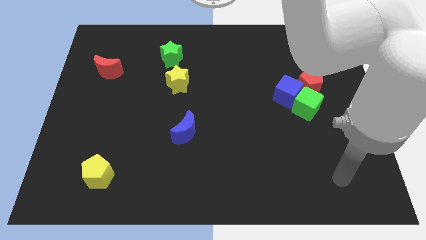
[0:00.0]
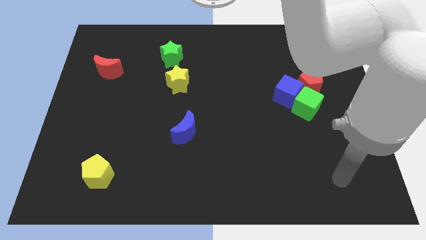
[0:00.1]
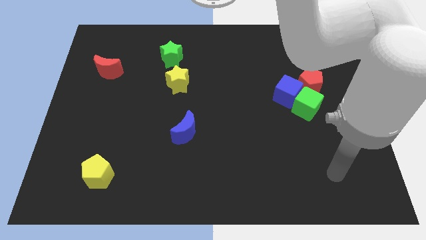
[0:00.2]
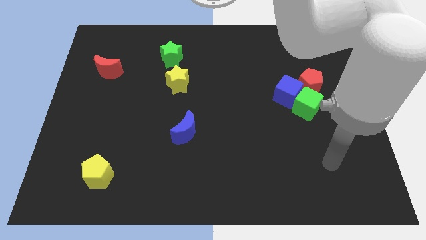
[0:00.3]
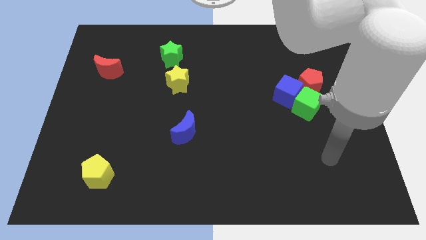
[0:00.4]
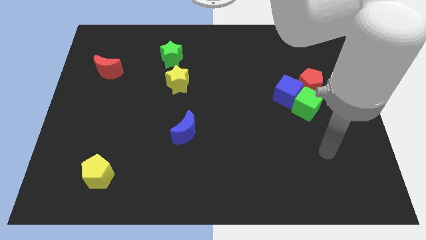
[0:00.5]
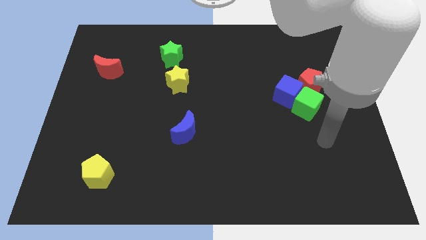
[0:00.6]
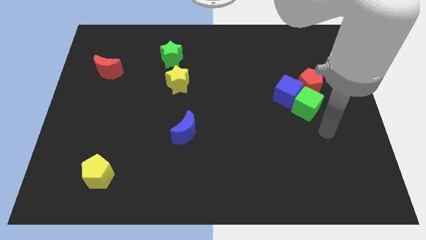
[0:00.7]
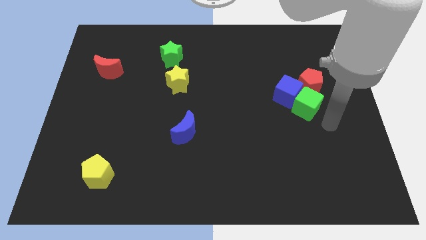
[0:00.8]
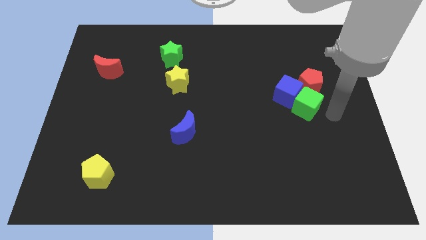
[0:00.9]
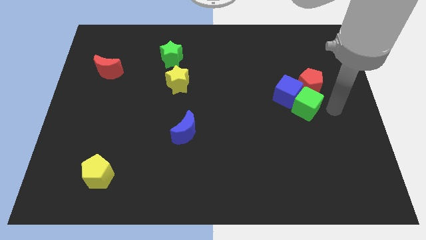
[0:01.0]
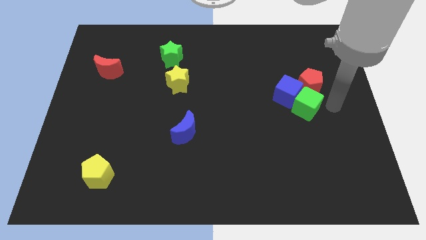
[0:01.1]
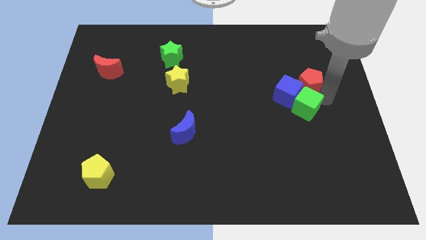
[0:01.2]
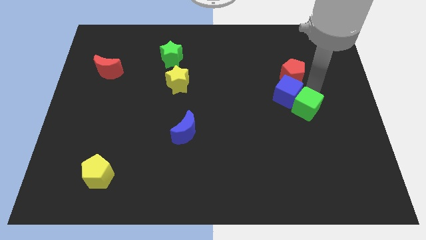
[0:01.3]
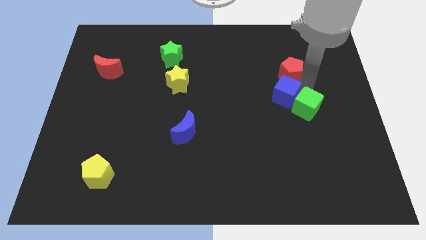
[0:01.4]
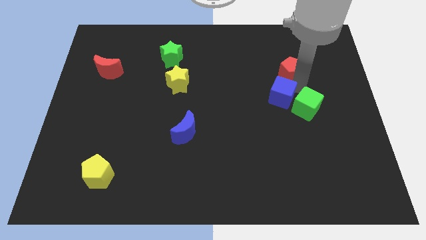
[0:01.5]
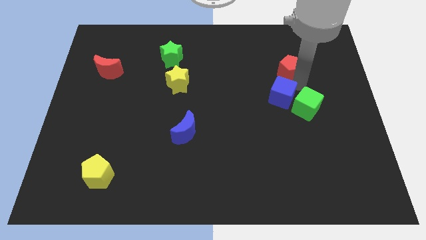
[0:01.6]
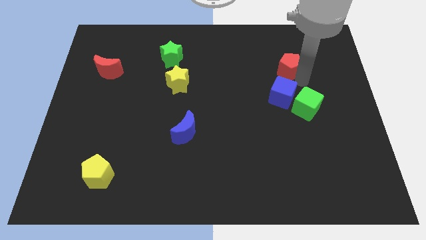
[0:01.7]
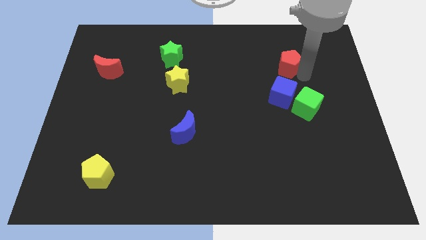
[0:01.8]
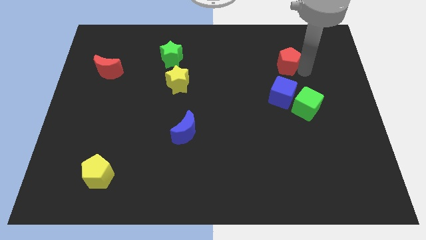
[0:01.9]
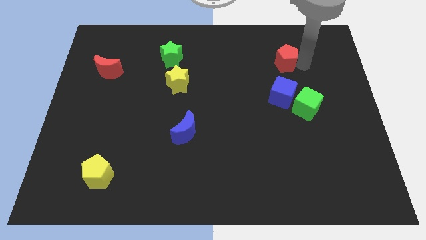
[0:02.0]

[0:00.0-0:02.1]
push the red pentagon to the top side of the blue cube

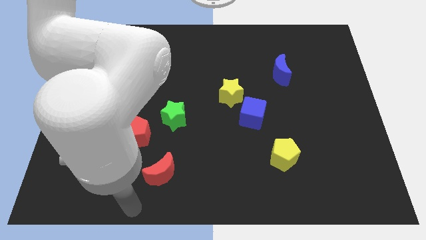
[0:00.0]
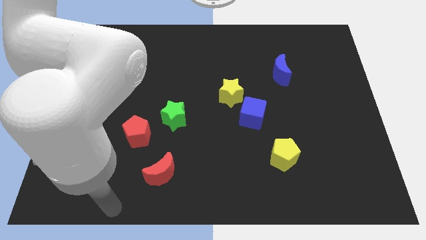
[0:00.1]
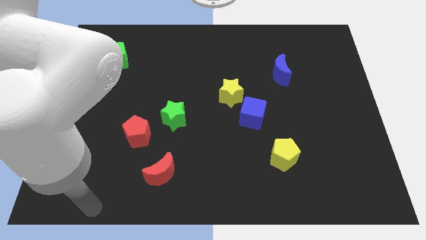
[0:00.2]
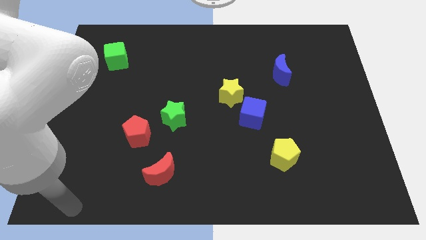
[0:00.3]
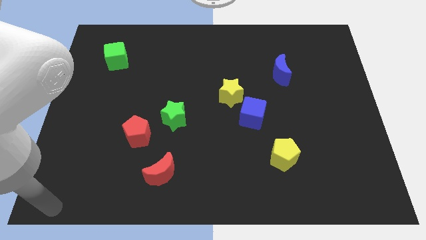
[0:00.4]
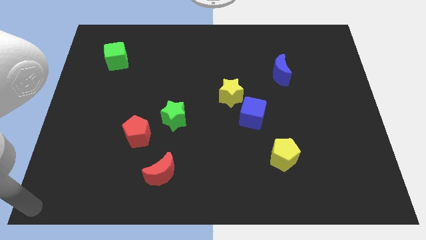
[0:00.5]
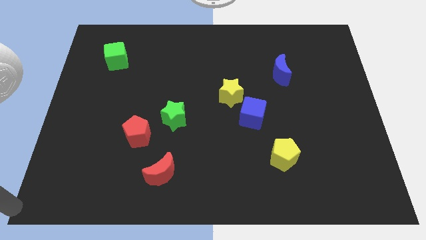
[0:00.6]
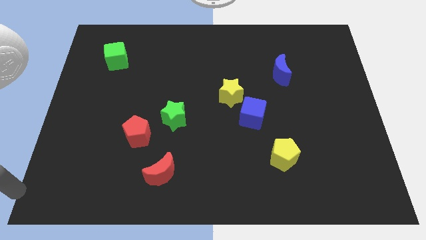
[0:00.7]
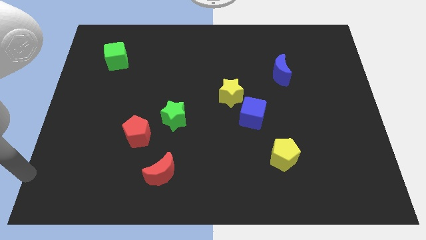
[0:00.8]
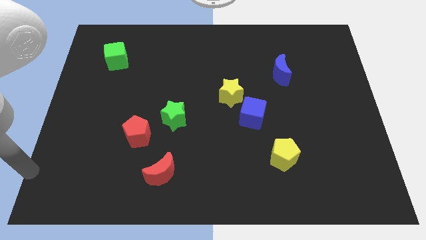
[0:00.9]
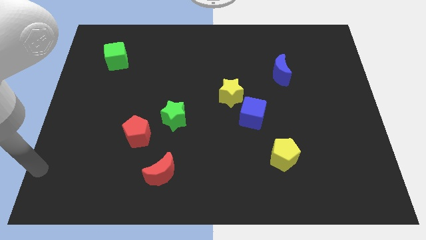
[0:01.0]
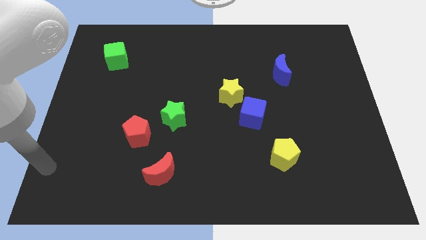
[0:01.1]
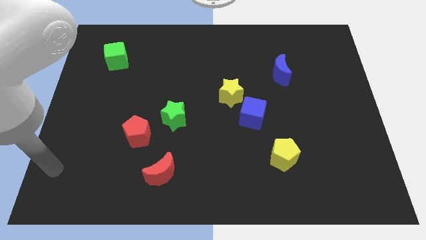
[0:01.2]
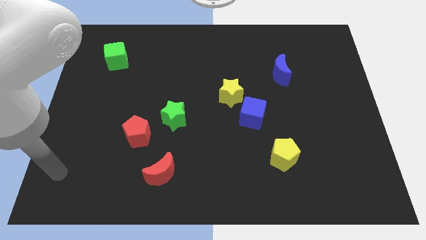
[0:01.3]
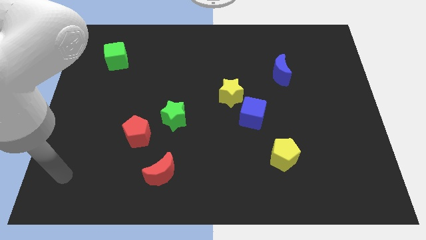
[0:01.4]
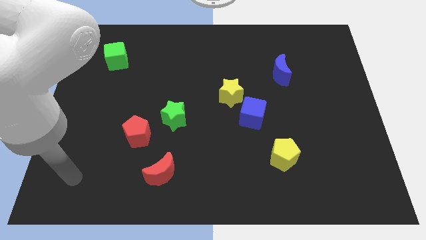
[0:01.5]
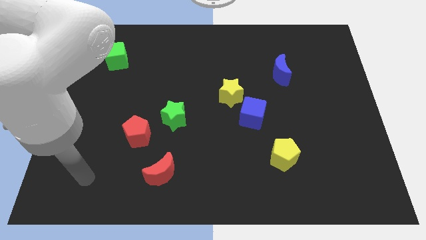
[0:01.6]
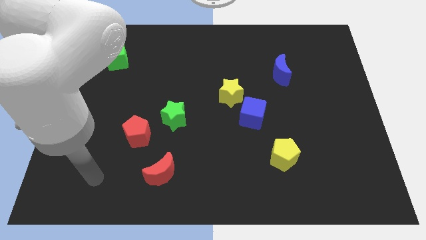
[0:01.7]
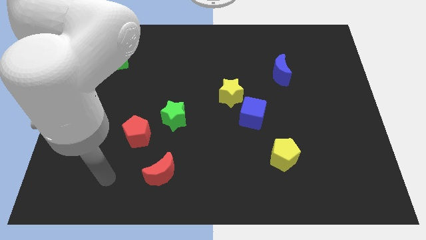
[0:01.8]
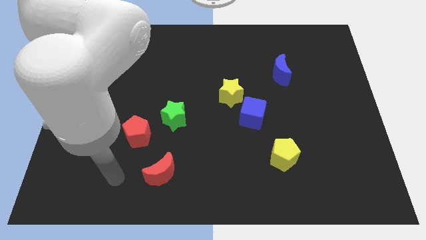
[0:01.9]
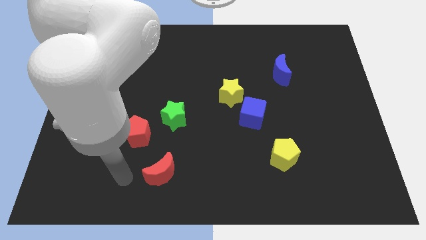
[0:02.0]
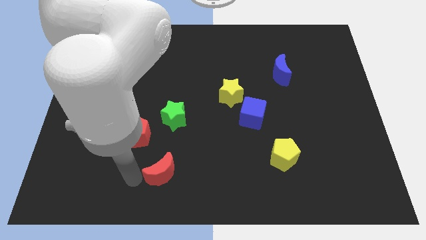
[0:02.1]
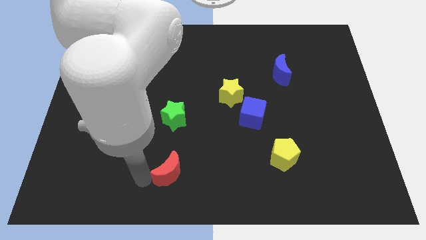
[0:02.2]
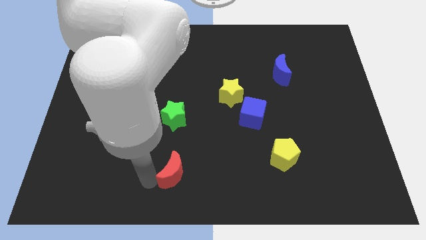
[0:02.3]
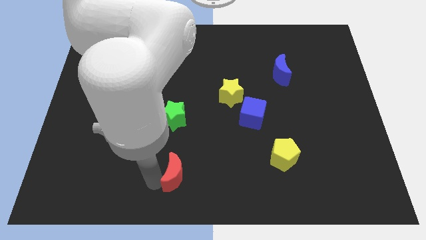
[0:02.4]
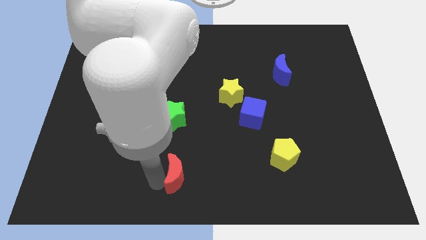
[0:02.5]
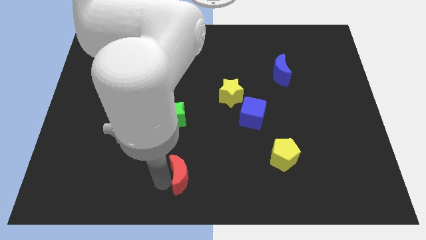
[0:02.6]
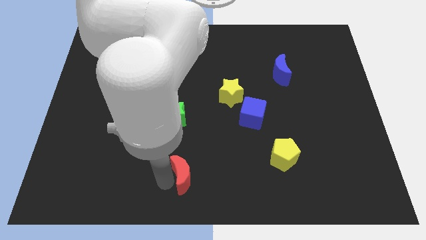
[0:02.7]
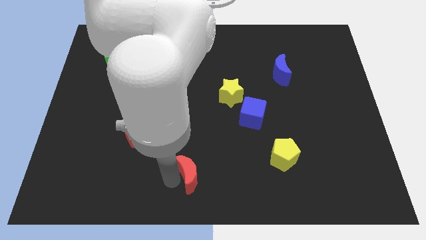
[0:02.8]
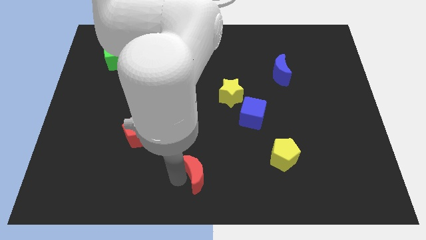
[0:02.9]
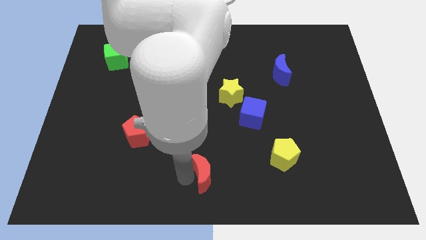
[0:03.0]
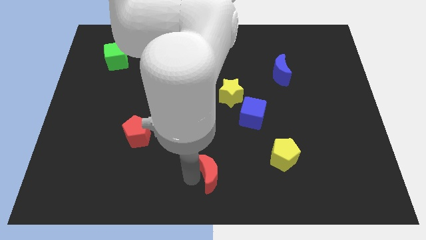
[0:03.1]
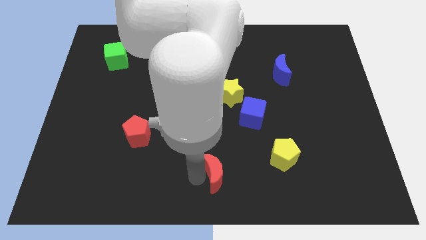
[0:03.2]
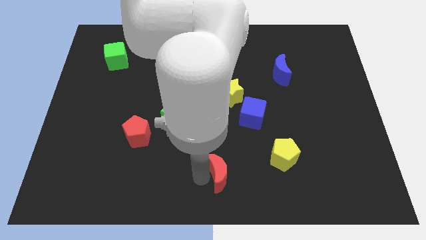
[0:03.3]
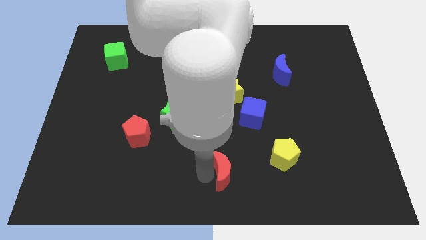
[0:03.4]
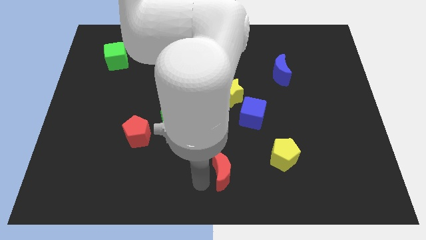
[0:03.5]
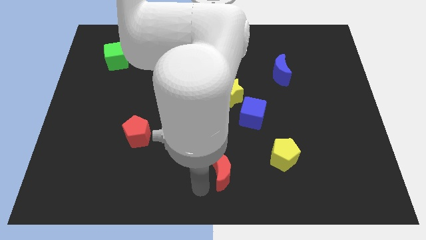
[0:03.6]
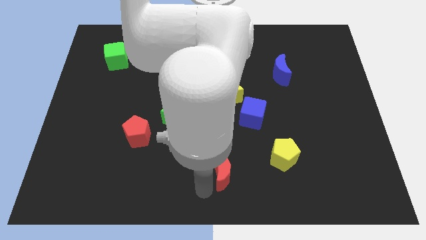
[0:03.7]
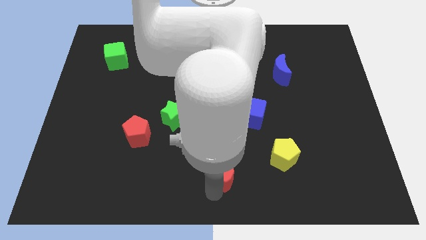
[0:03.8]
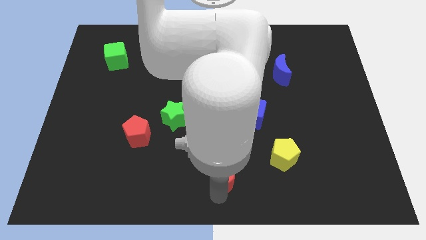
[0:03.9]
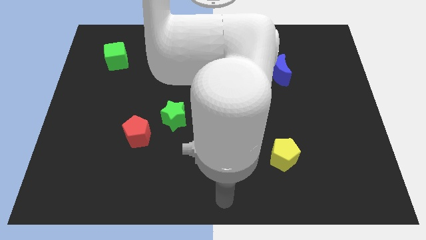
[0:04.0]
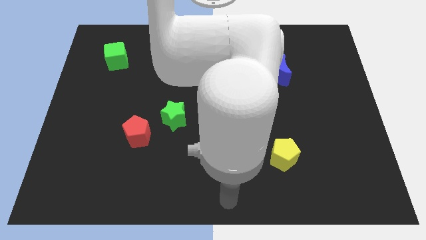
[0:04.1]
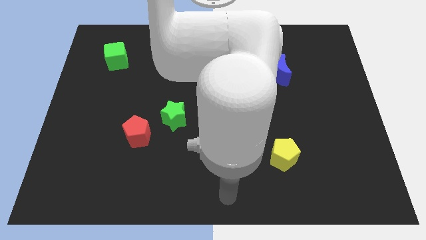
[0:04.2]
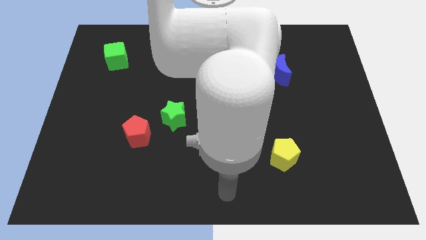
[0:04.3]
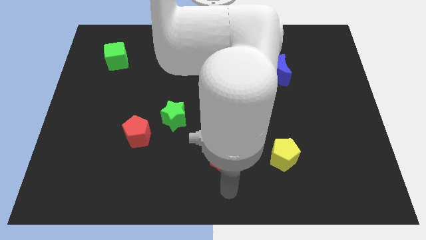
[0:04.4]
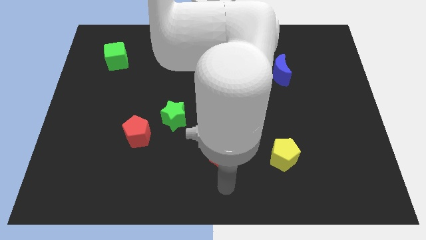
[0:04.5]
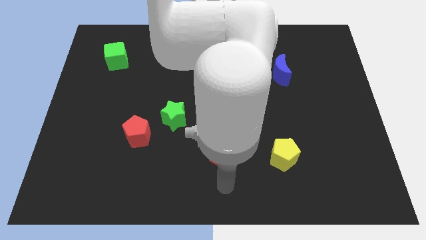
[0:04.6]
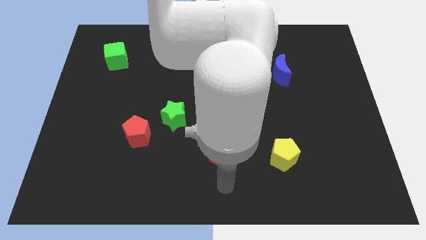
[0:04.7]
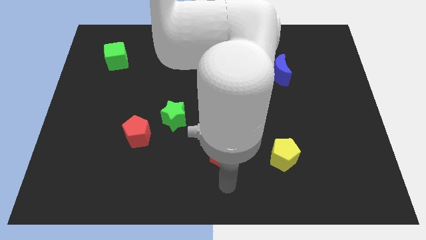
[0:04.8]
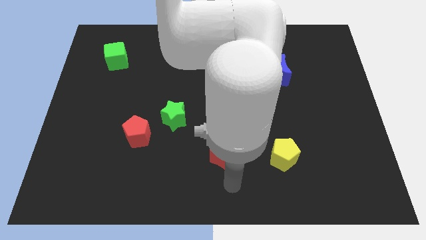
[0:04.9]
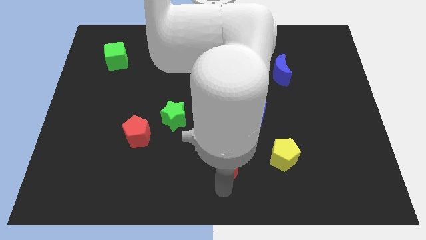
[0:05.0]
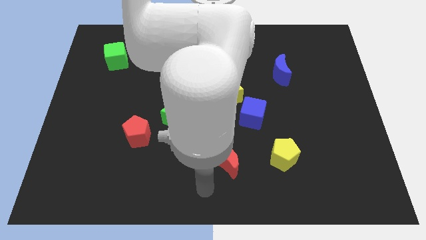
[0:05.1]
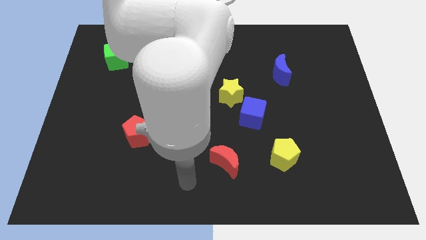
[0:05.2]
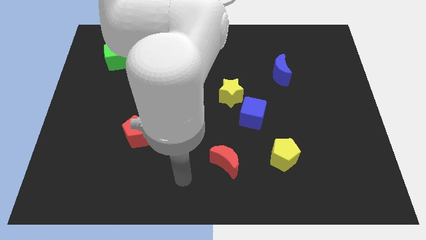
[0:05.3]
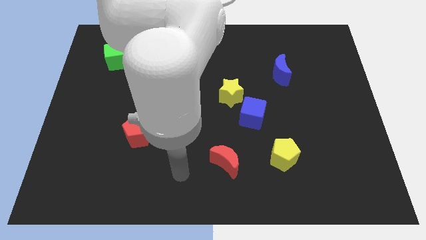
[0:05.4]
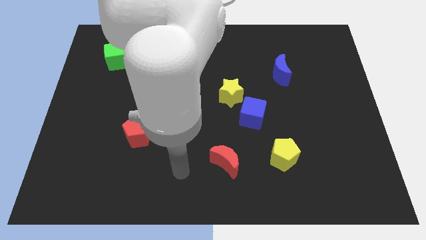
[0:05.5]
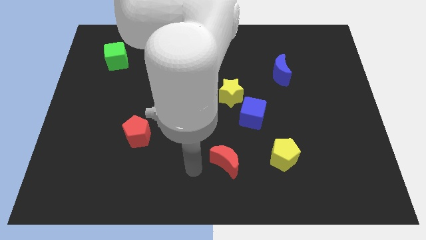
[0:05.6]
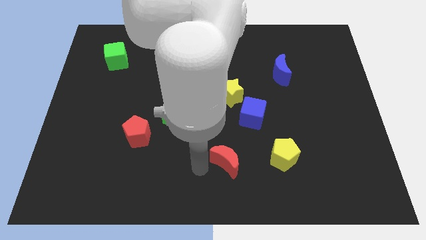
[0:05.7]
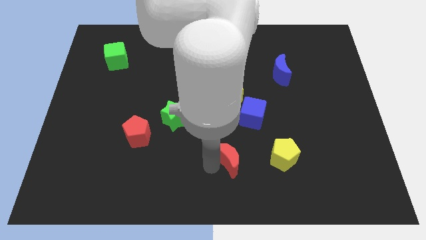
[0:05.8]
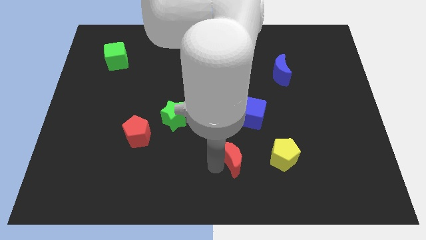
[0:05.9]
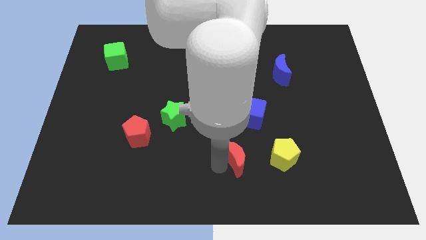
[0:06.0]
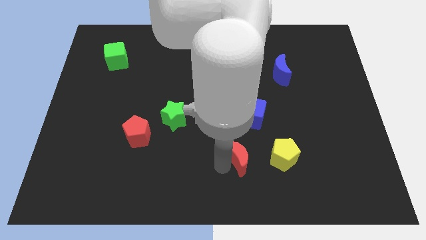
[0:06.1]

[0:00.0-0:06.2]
place the red moon below the green star
